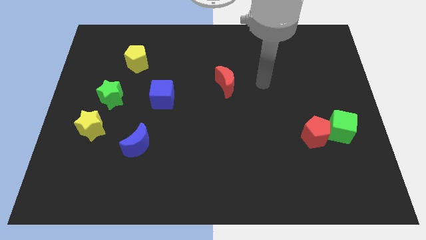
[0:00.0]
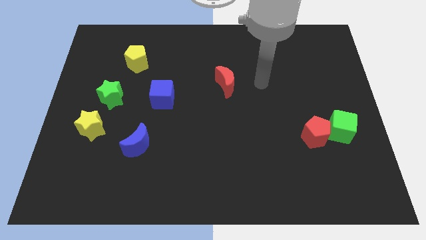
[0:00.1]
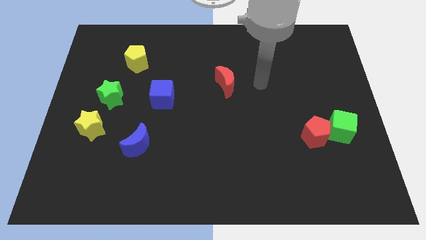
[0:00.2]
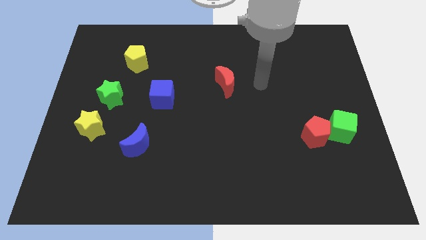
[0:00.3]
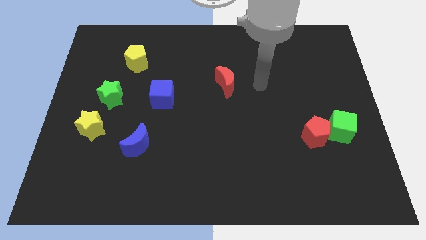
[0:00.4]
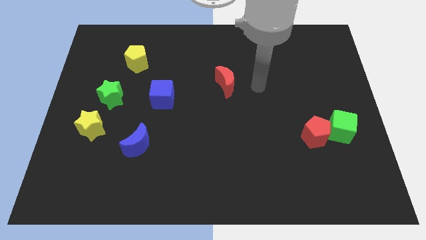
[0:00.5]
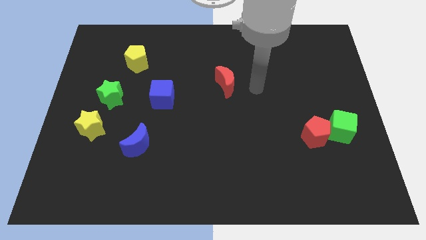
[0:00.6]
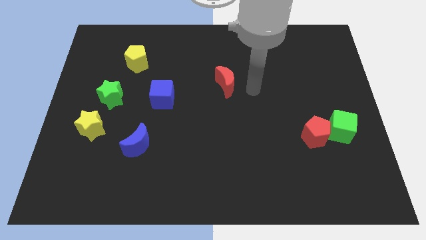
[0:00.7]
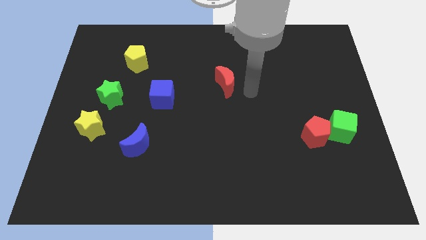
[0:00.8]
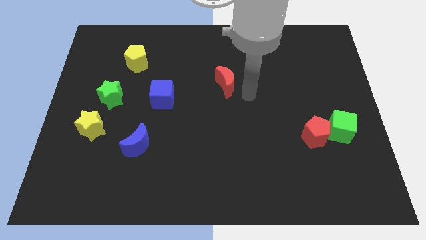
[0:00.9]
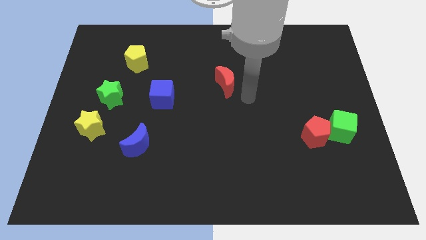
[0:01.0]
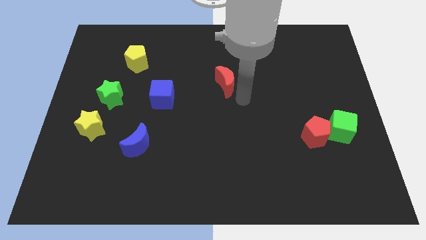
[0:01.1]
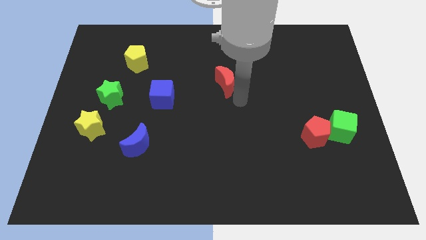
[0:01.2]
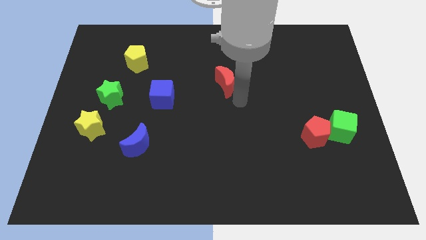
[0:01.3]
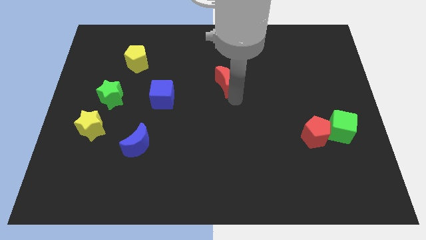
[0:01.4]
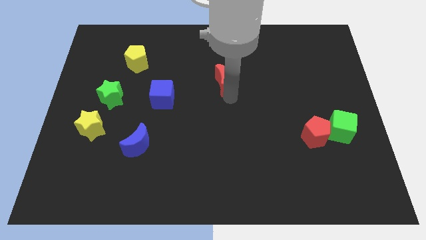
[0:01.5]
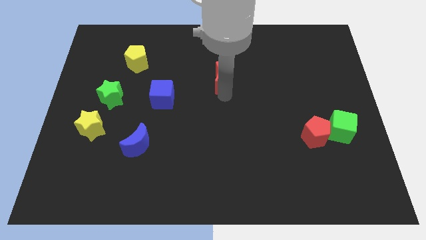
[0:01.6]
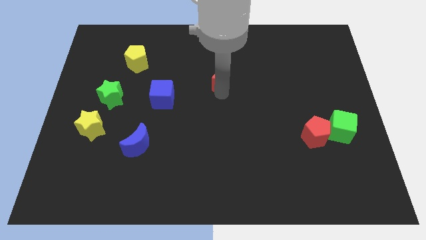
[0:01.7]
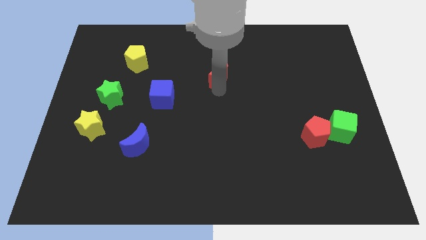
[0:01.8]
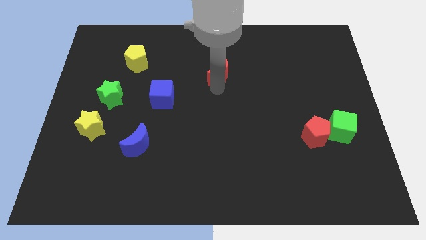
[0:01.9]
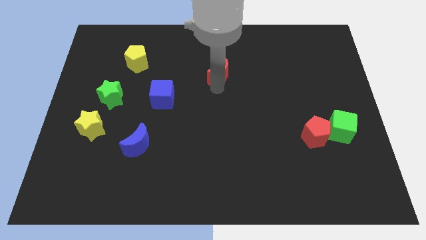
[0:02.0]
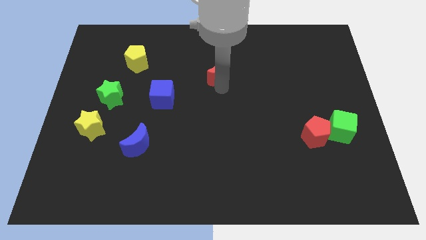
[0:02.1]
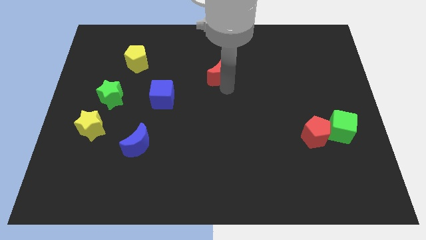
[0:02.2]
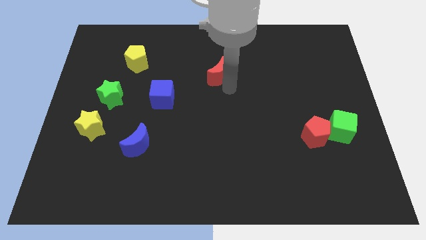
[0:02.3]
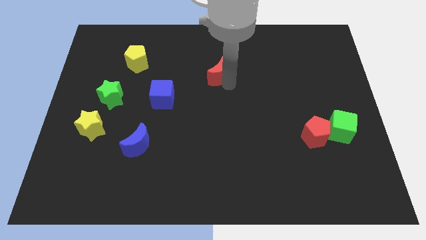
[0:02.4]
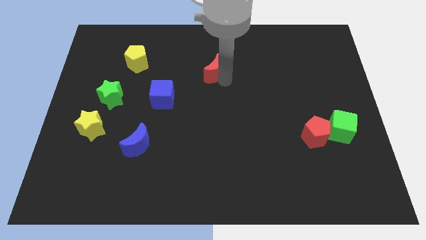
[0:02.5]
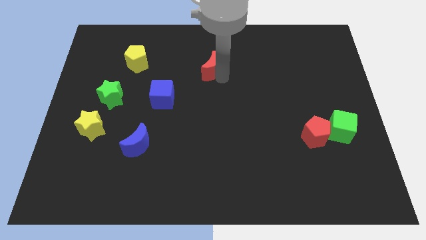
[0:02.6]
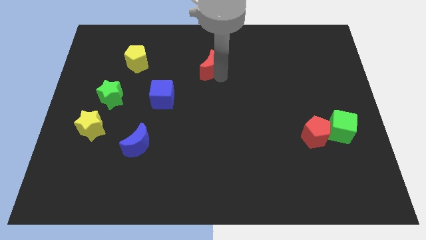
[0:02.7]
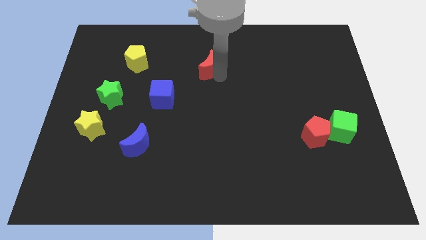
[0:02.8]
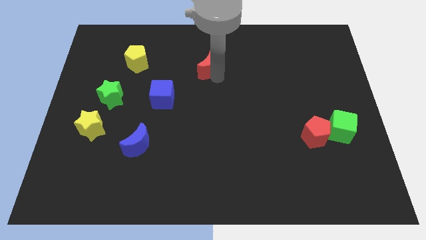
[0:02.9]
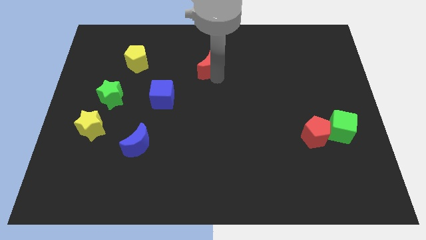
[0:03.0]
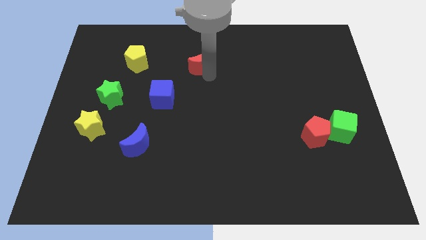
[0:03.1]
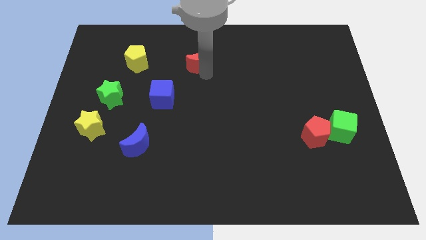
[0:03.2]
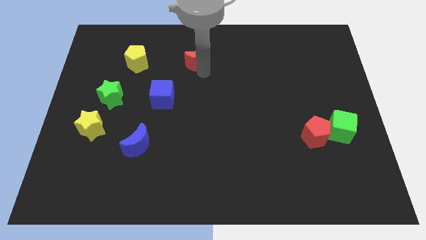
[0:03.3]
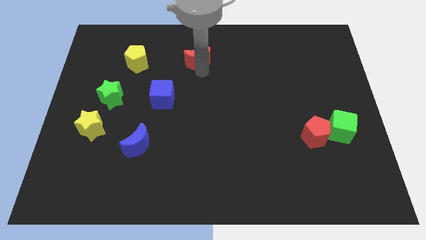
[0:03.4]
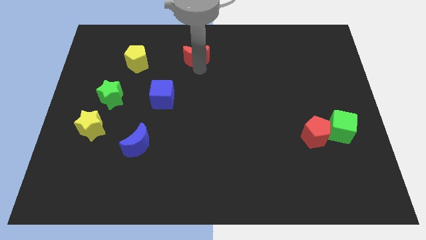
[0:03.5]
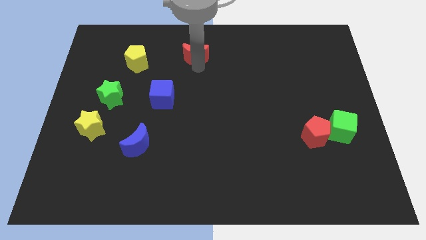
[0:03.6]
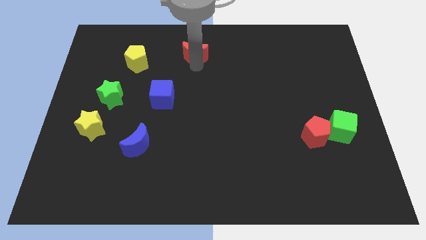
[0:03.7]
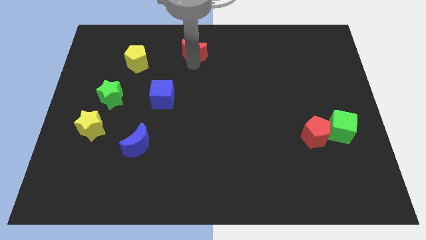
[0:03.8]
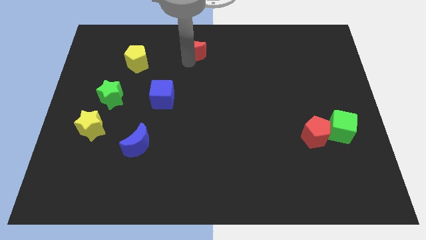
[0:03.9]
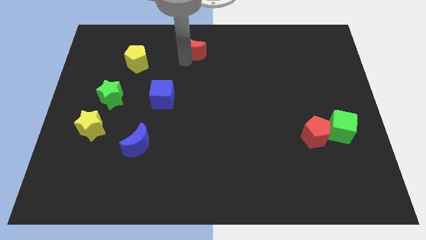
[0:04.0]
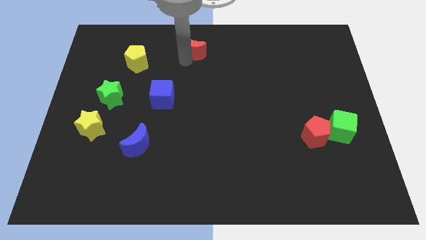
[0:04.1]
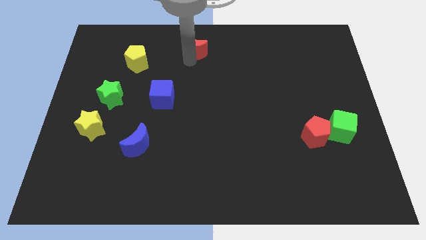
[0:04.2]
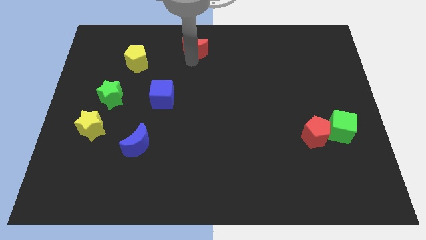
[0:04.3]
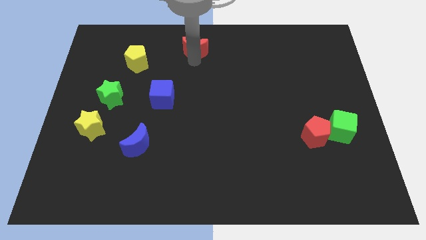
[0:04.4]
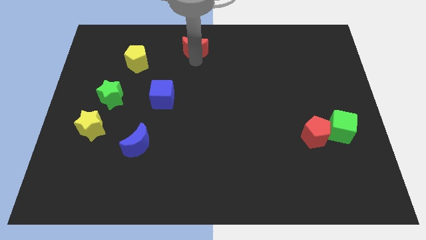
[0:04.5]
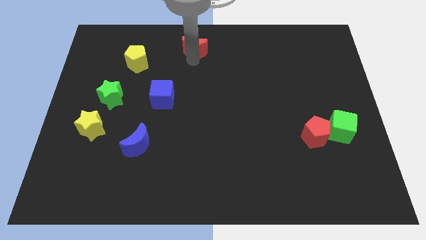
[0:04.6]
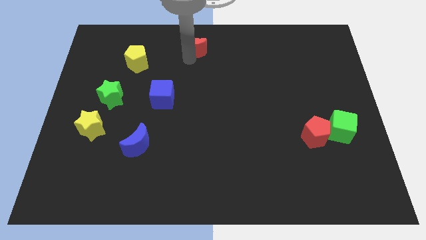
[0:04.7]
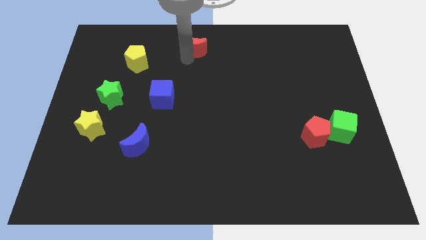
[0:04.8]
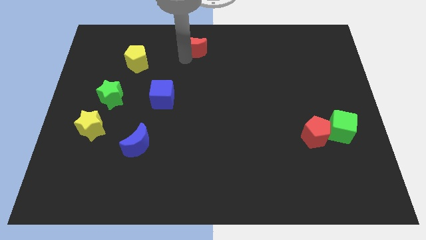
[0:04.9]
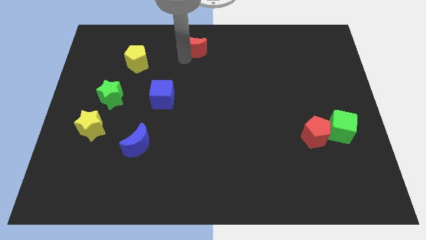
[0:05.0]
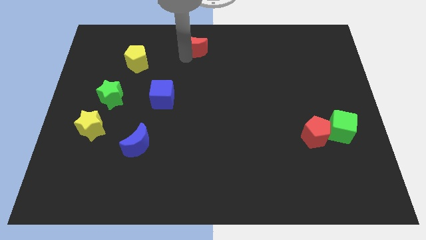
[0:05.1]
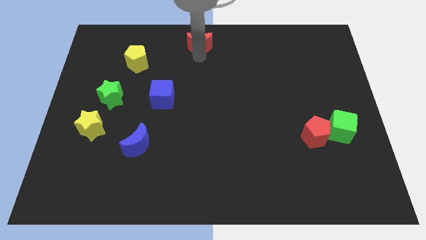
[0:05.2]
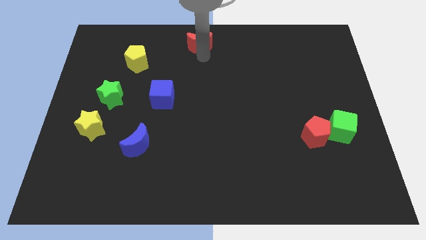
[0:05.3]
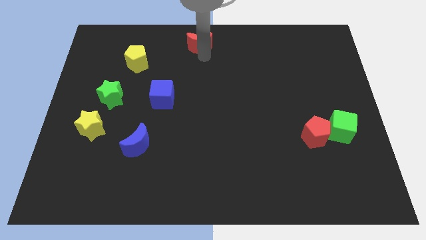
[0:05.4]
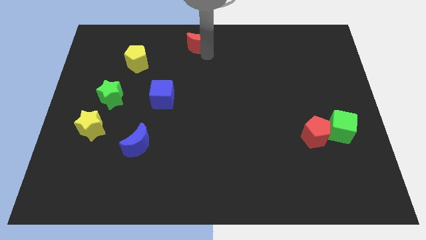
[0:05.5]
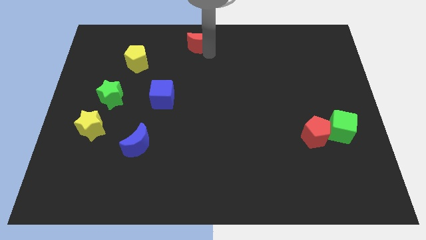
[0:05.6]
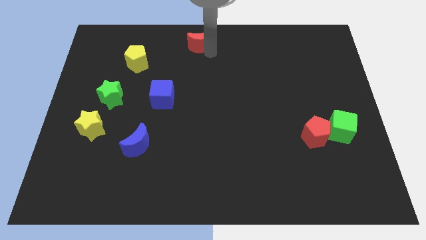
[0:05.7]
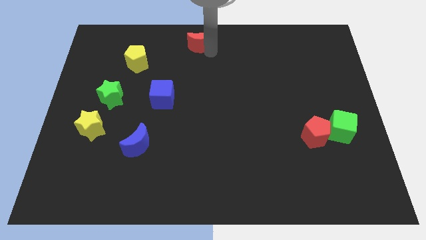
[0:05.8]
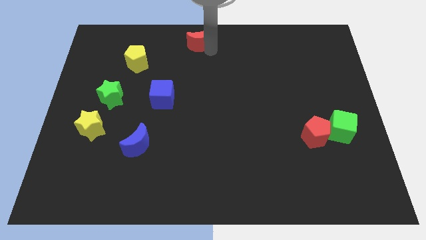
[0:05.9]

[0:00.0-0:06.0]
push the red crescent towards the top center

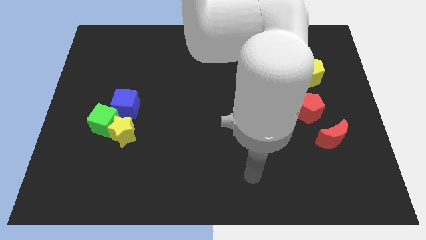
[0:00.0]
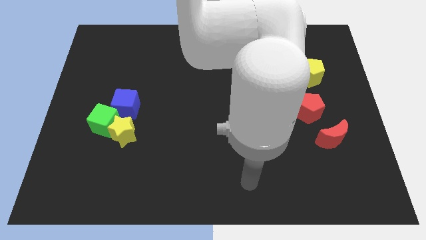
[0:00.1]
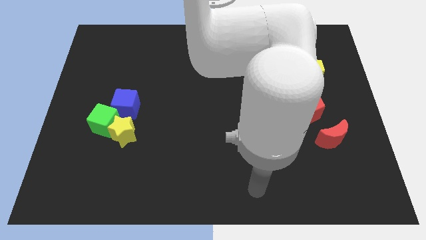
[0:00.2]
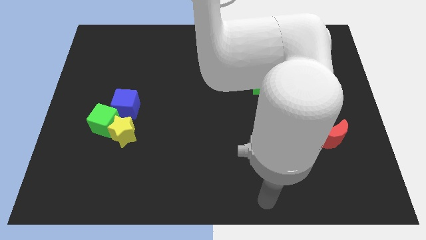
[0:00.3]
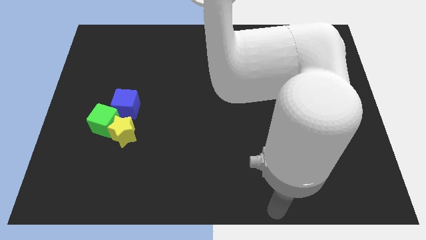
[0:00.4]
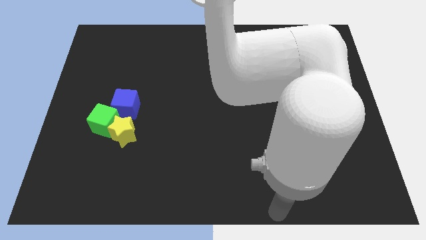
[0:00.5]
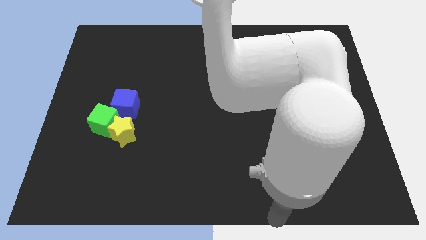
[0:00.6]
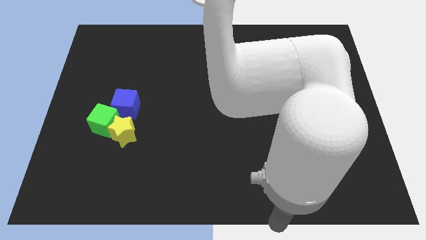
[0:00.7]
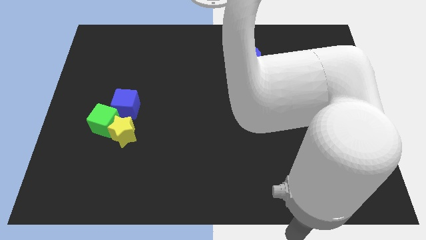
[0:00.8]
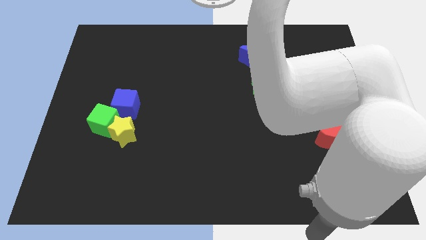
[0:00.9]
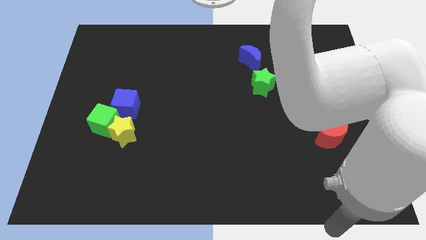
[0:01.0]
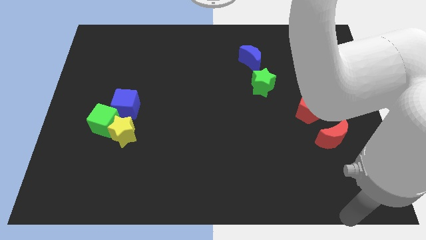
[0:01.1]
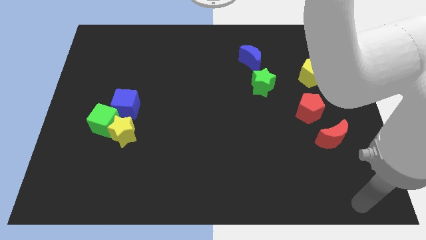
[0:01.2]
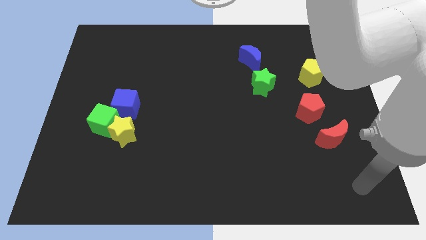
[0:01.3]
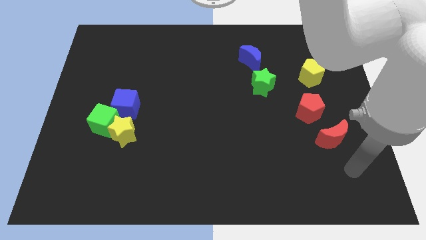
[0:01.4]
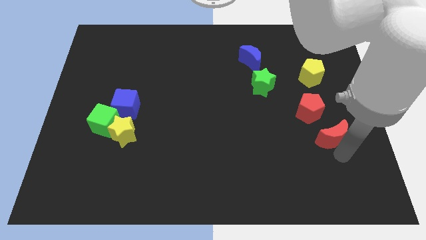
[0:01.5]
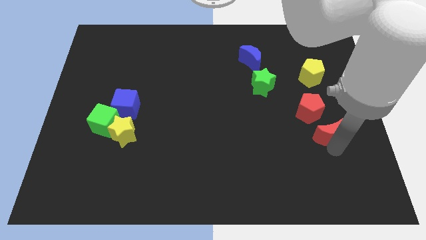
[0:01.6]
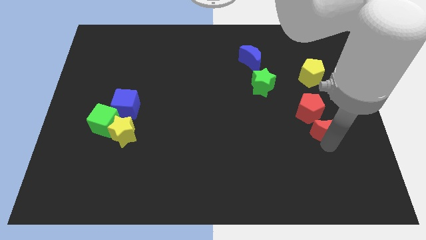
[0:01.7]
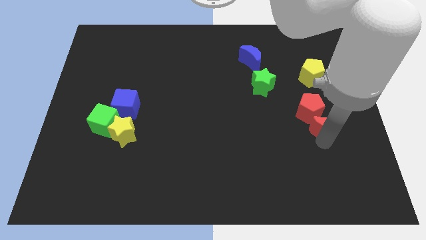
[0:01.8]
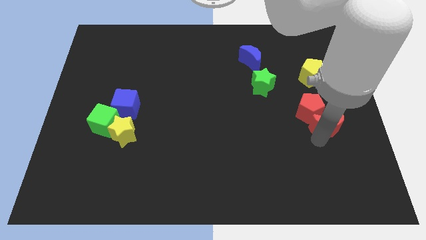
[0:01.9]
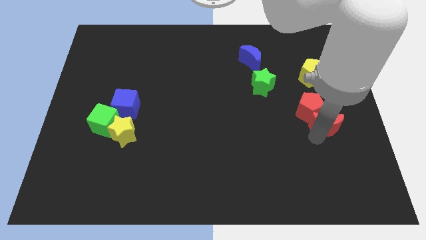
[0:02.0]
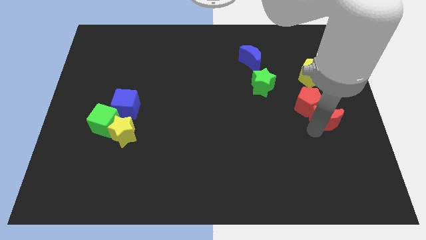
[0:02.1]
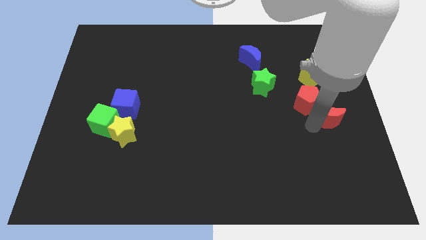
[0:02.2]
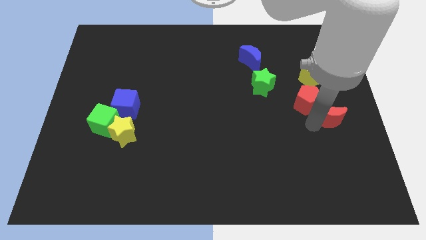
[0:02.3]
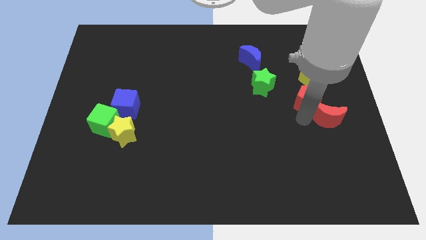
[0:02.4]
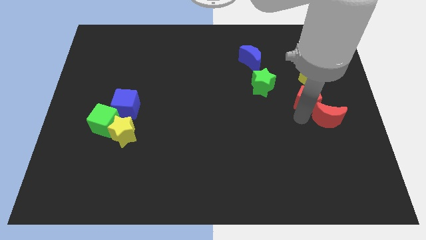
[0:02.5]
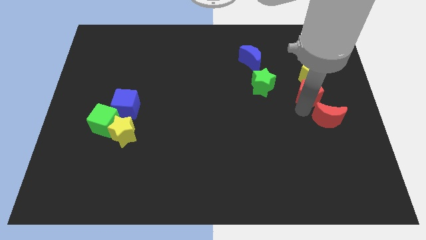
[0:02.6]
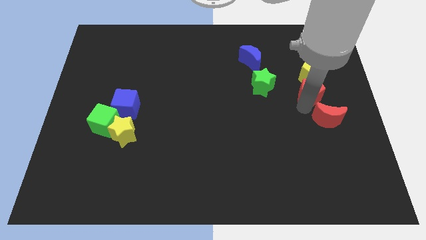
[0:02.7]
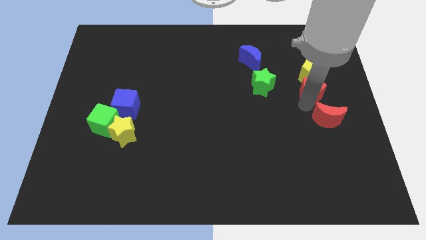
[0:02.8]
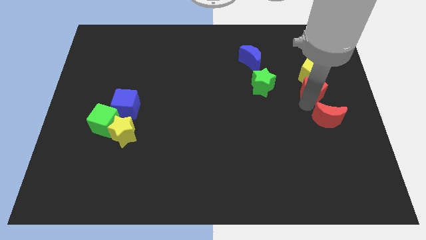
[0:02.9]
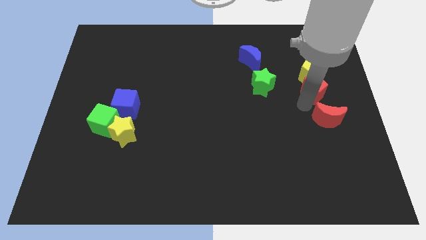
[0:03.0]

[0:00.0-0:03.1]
push the red moon into the red pentagon
